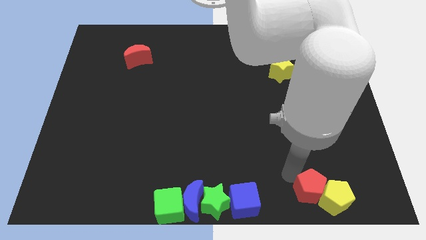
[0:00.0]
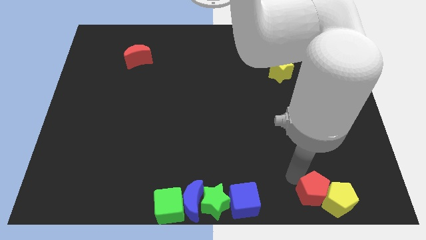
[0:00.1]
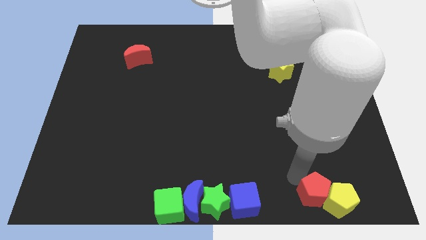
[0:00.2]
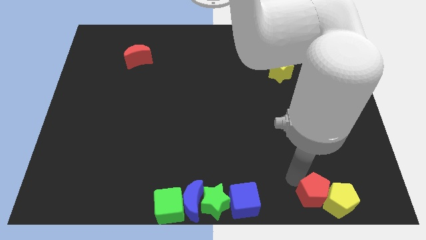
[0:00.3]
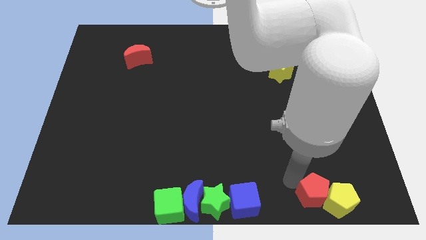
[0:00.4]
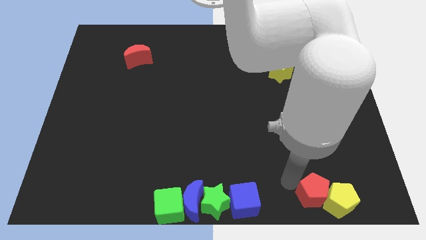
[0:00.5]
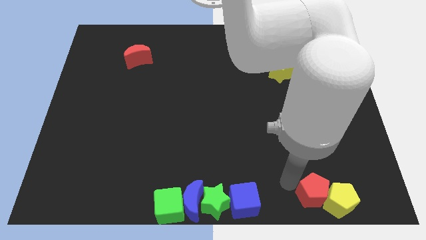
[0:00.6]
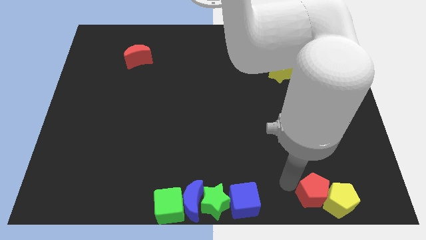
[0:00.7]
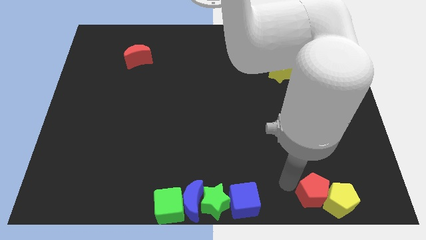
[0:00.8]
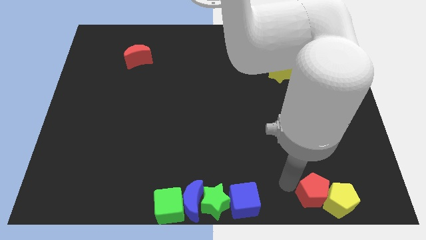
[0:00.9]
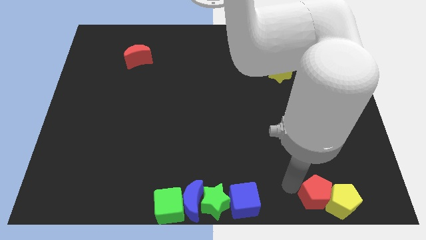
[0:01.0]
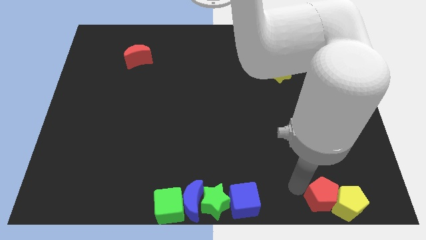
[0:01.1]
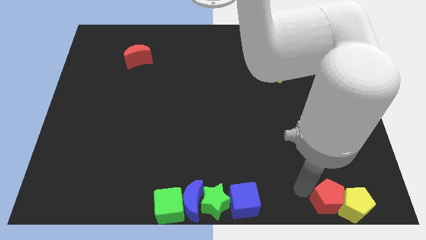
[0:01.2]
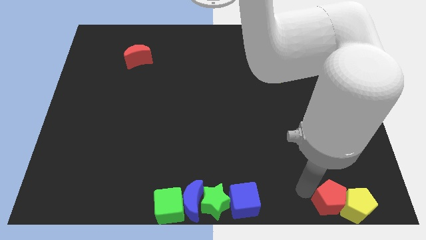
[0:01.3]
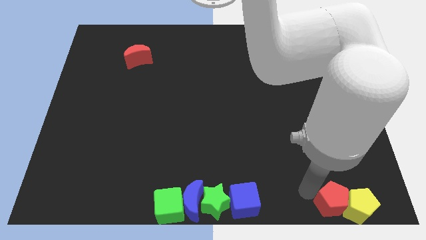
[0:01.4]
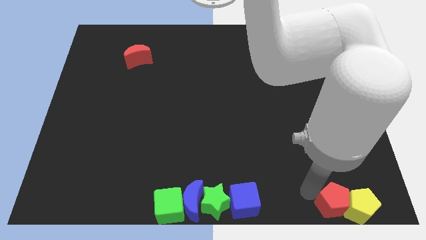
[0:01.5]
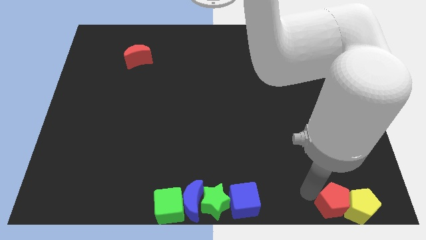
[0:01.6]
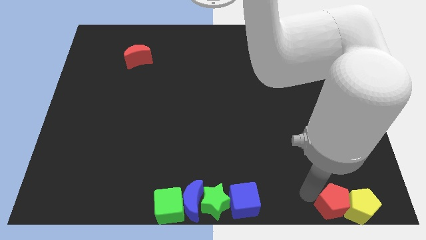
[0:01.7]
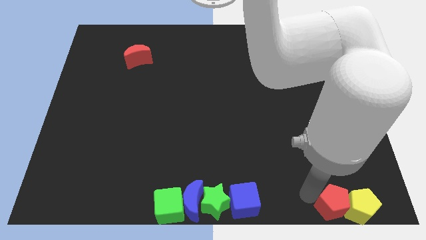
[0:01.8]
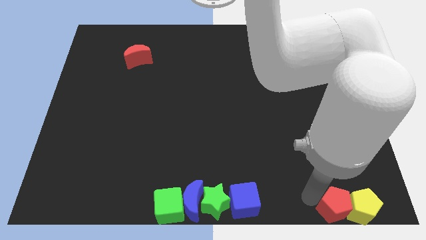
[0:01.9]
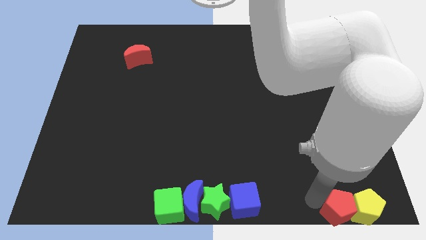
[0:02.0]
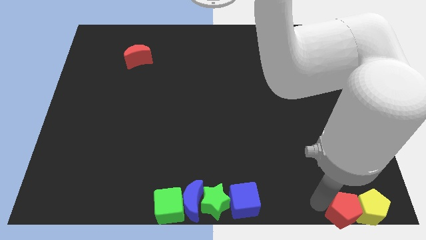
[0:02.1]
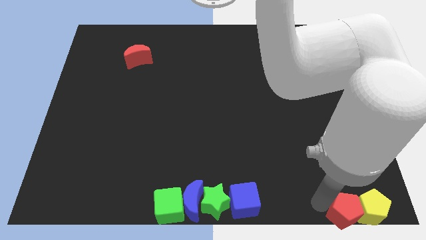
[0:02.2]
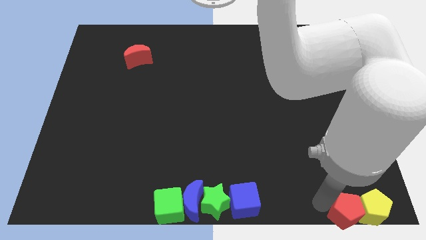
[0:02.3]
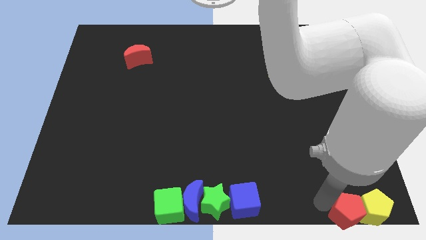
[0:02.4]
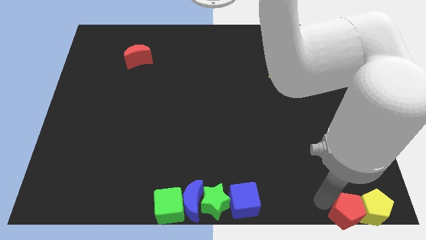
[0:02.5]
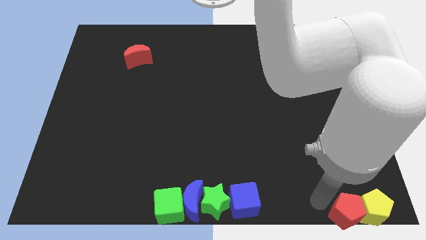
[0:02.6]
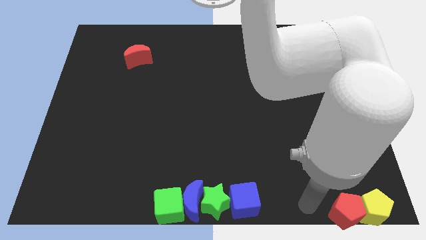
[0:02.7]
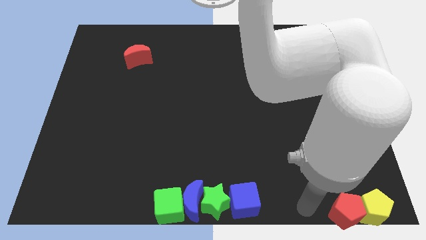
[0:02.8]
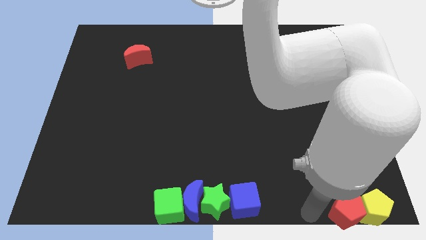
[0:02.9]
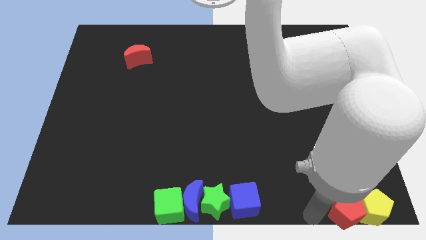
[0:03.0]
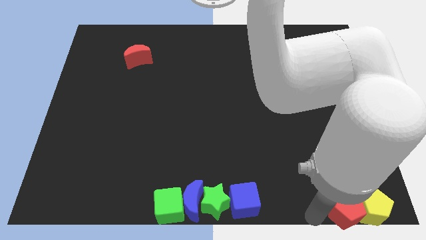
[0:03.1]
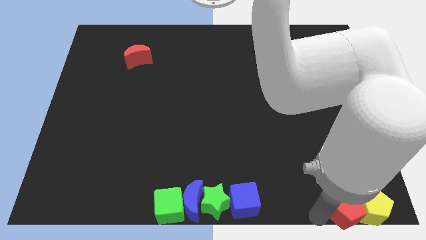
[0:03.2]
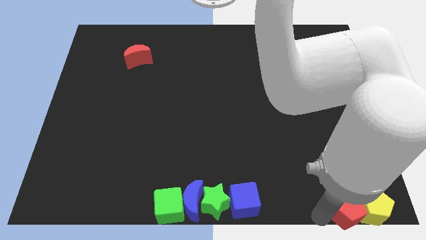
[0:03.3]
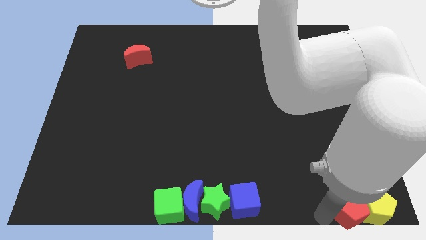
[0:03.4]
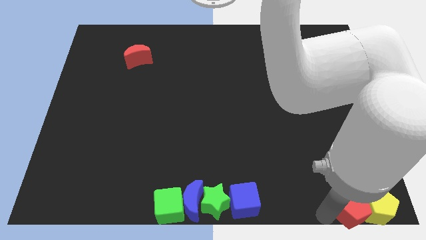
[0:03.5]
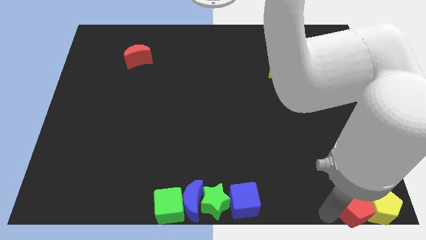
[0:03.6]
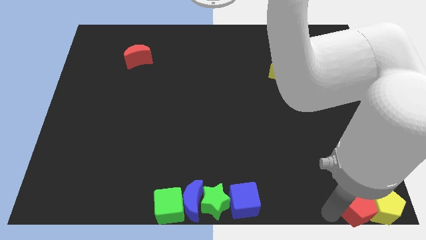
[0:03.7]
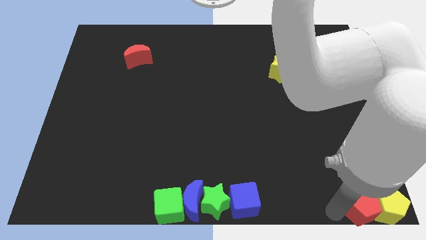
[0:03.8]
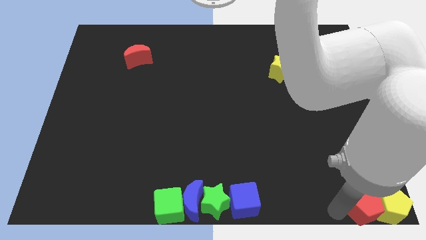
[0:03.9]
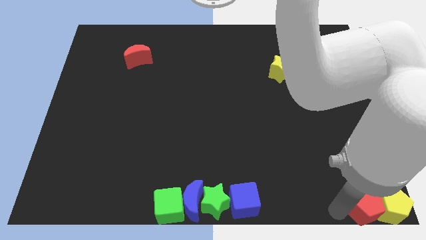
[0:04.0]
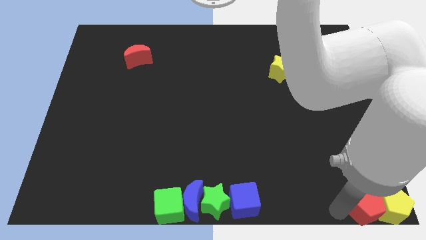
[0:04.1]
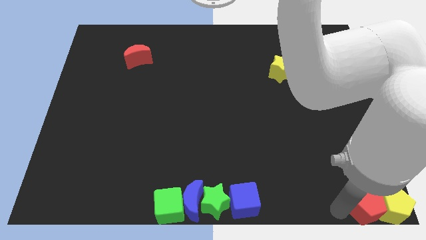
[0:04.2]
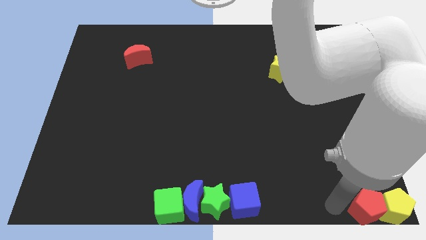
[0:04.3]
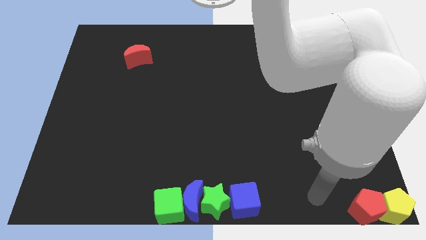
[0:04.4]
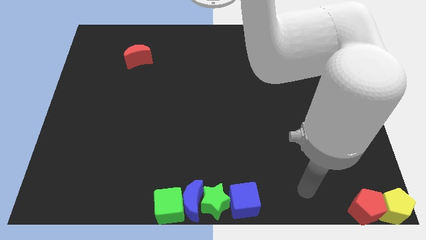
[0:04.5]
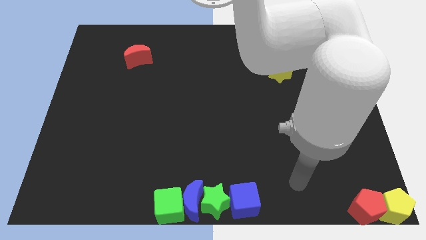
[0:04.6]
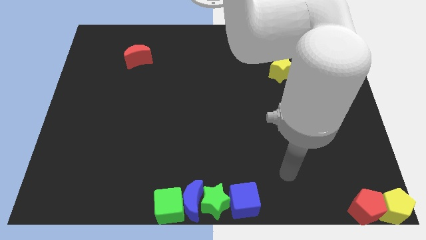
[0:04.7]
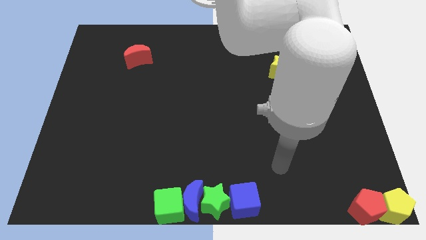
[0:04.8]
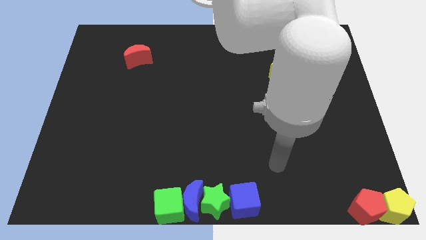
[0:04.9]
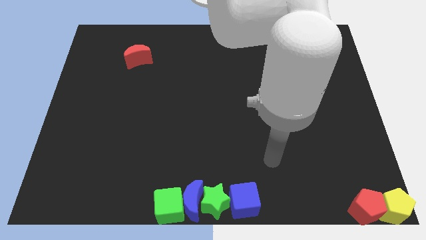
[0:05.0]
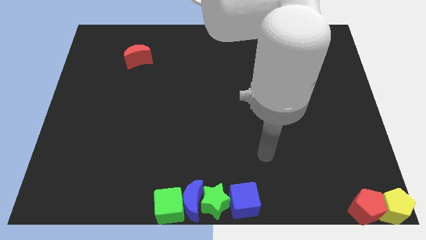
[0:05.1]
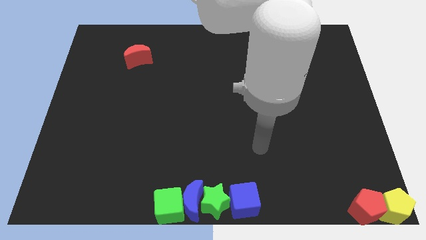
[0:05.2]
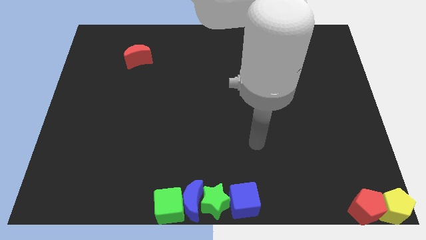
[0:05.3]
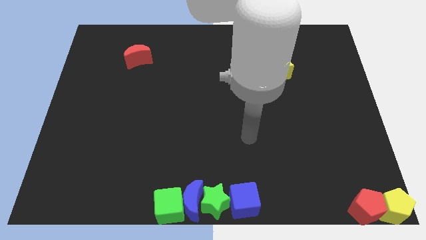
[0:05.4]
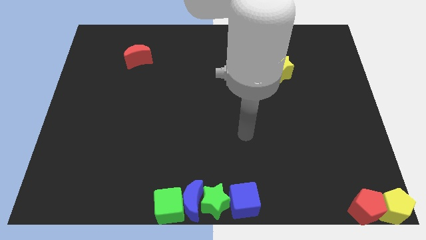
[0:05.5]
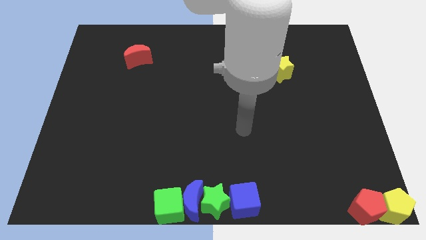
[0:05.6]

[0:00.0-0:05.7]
move the red pentagon and yellow pentagon to the bottom right corner of the board

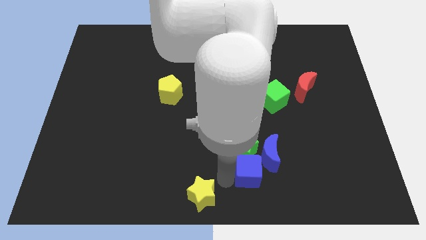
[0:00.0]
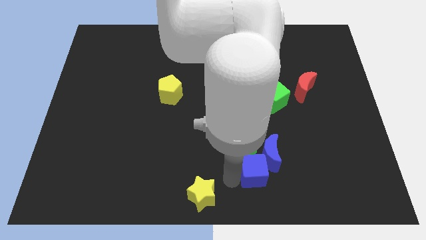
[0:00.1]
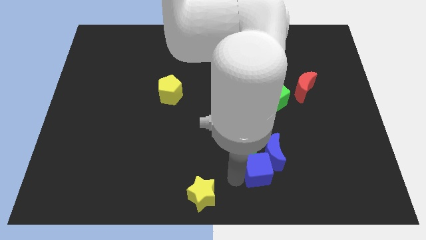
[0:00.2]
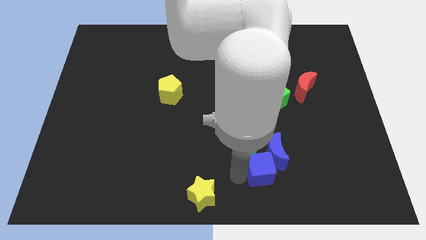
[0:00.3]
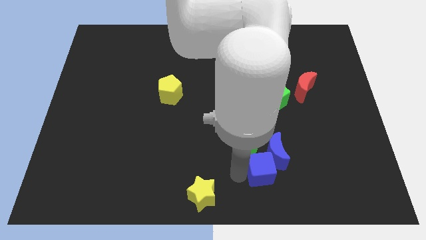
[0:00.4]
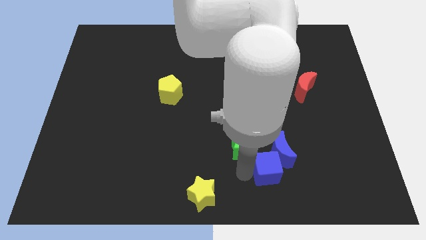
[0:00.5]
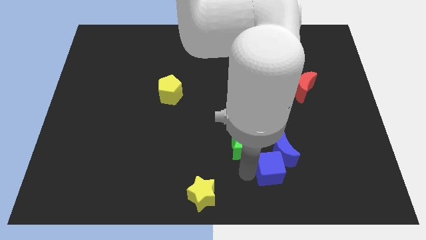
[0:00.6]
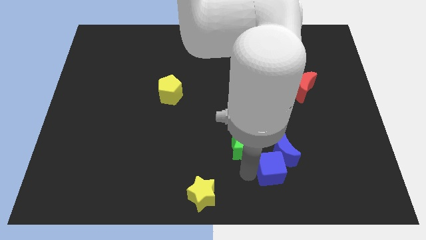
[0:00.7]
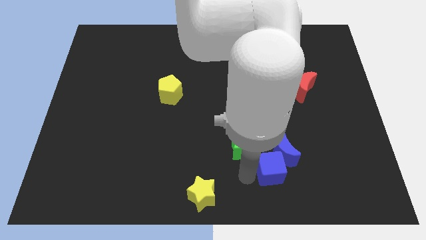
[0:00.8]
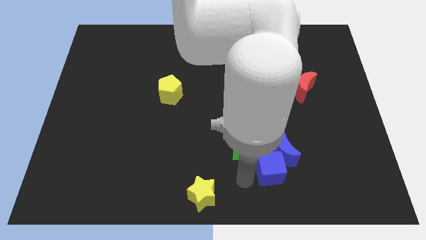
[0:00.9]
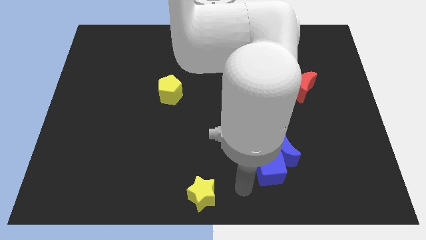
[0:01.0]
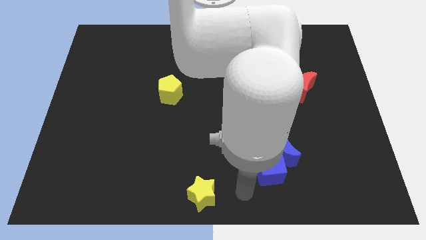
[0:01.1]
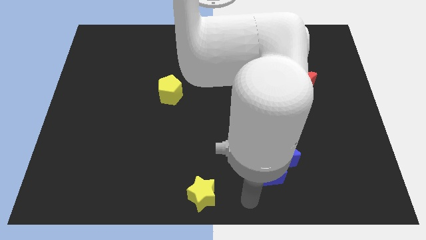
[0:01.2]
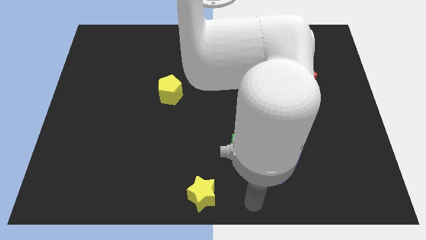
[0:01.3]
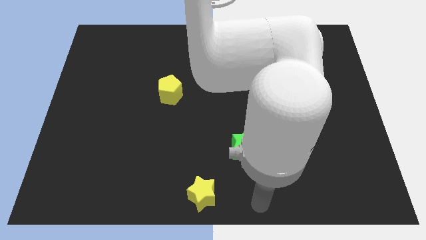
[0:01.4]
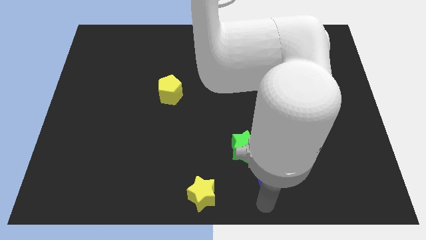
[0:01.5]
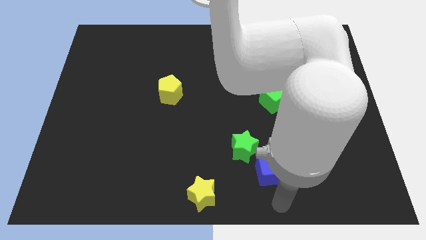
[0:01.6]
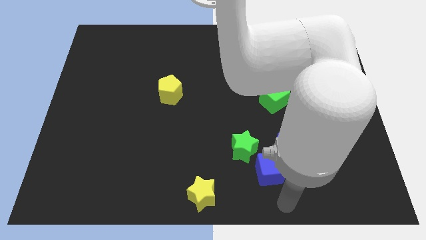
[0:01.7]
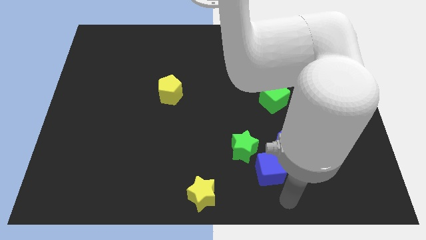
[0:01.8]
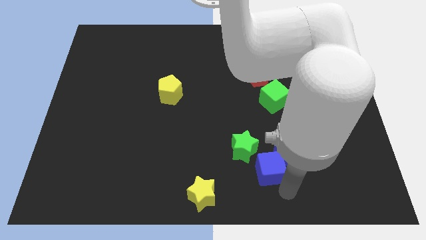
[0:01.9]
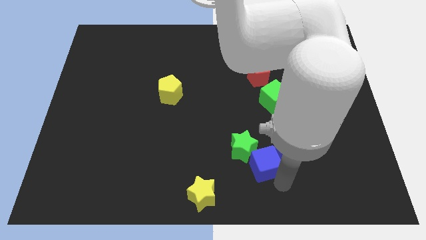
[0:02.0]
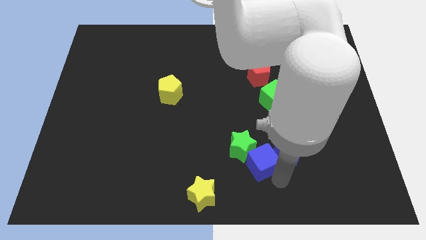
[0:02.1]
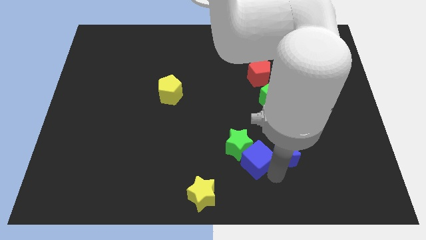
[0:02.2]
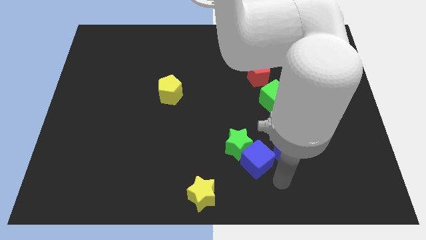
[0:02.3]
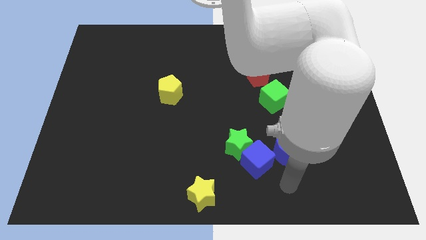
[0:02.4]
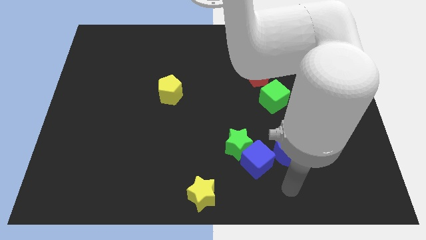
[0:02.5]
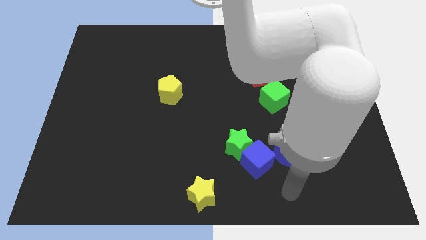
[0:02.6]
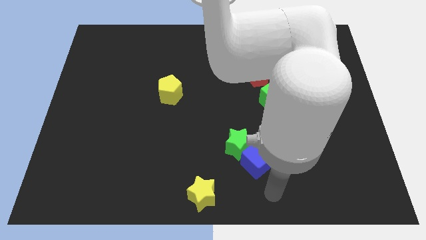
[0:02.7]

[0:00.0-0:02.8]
push the blue cube into the green star

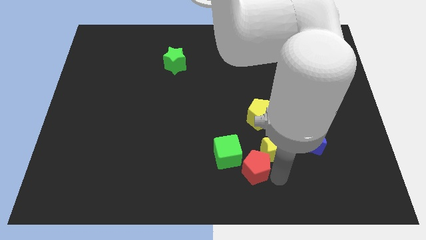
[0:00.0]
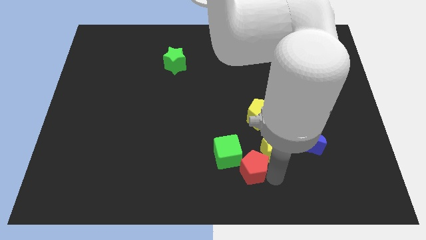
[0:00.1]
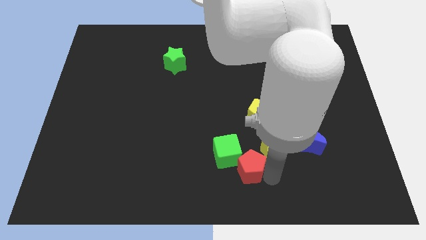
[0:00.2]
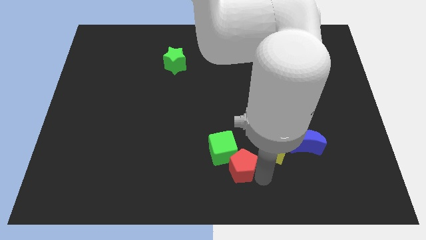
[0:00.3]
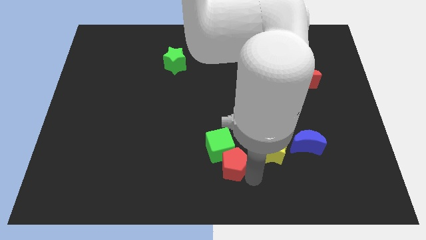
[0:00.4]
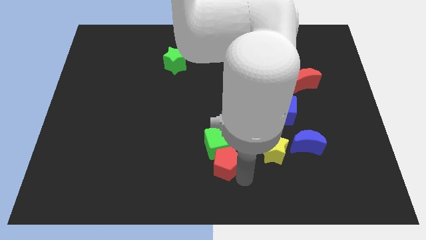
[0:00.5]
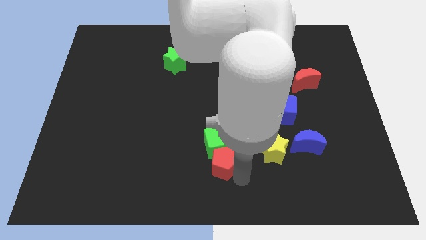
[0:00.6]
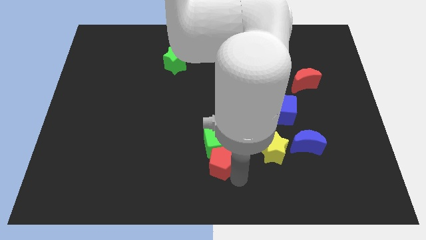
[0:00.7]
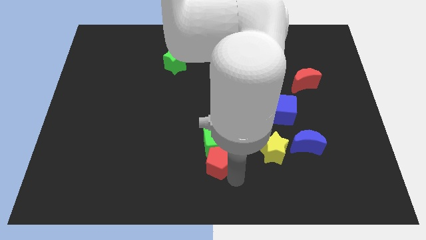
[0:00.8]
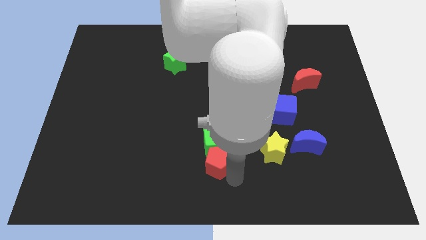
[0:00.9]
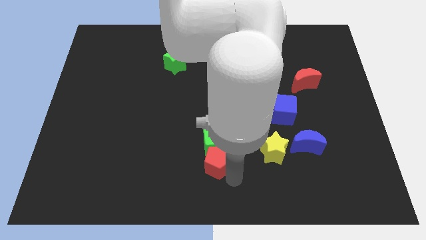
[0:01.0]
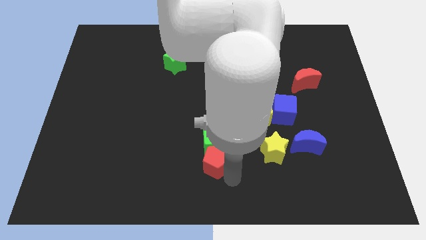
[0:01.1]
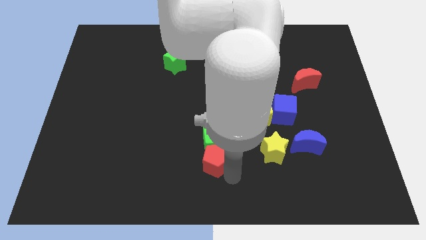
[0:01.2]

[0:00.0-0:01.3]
push the red pentagon to the bottom of the green cube
